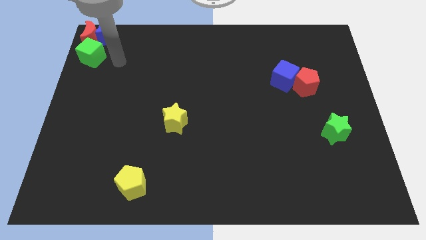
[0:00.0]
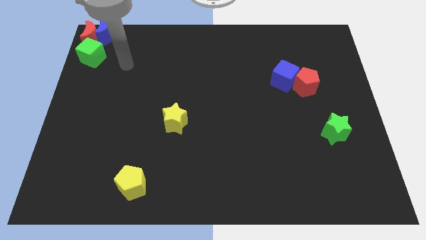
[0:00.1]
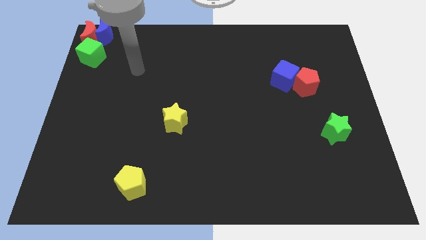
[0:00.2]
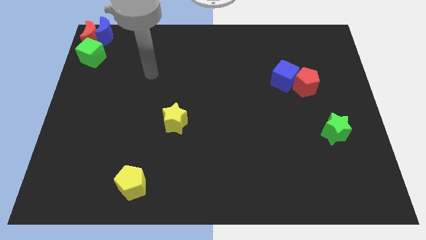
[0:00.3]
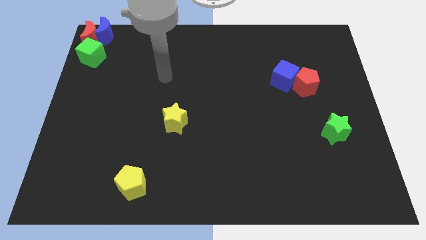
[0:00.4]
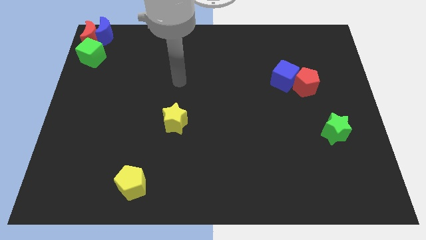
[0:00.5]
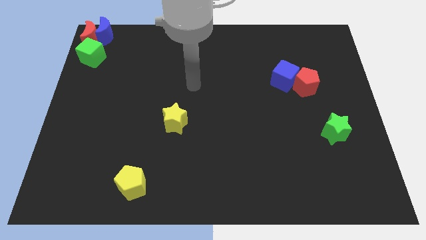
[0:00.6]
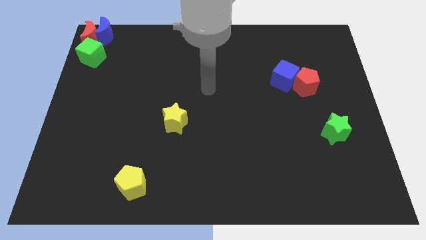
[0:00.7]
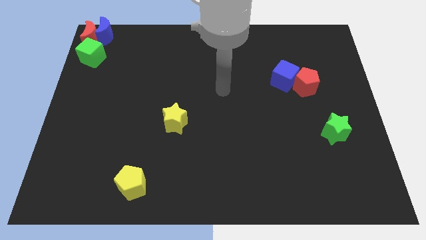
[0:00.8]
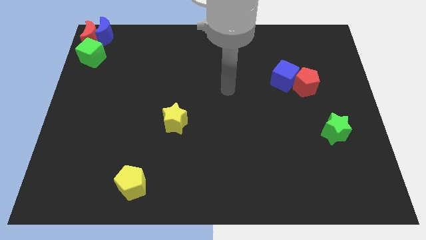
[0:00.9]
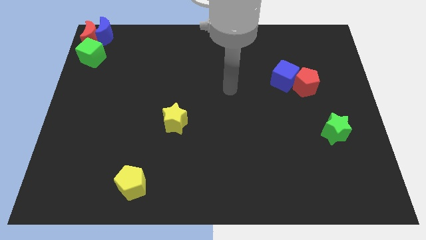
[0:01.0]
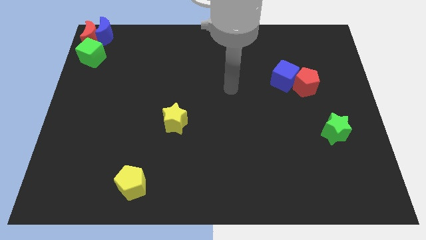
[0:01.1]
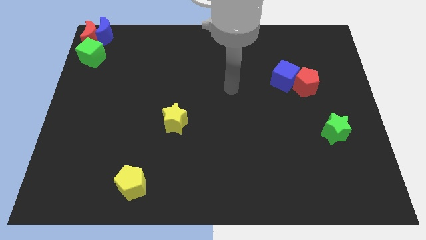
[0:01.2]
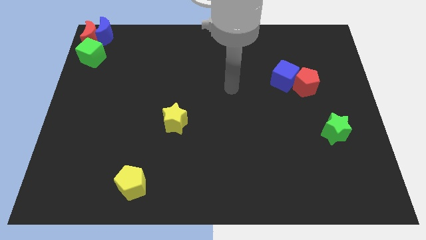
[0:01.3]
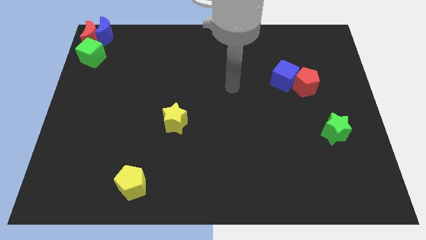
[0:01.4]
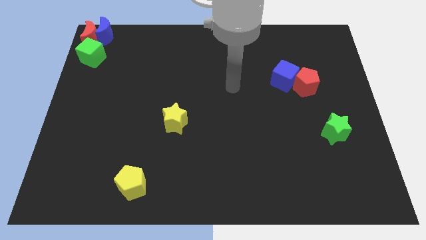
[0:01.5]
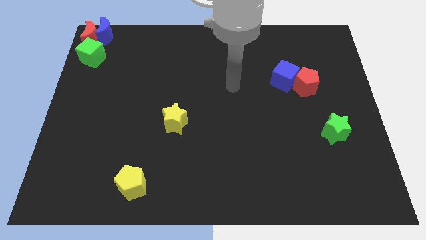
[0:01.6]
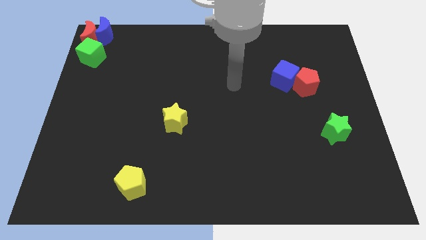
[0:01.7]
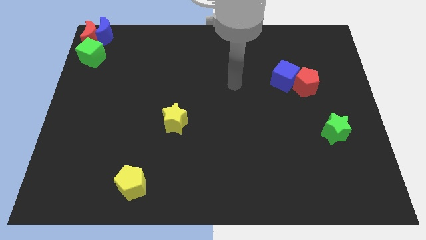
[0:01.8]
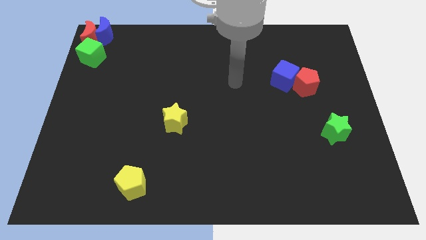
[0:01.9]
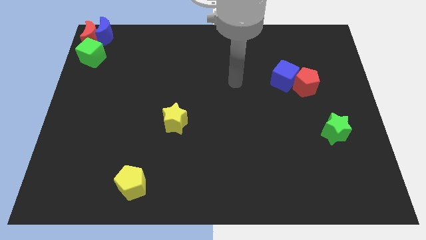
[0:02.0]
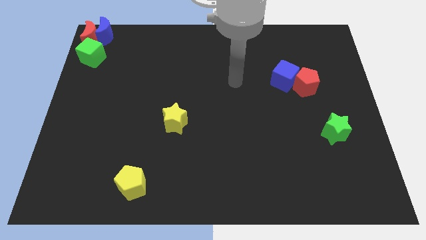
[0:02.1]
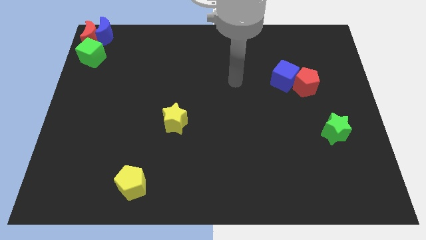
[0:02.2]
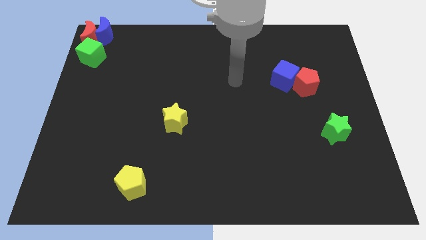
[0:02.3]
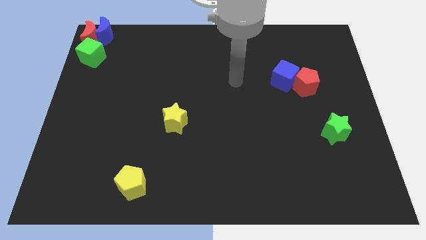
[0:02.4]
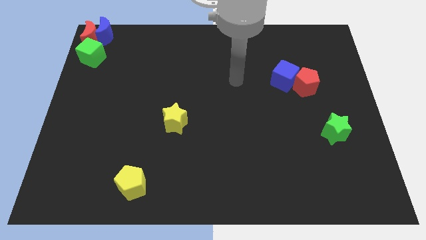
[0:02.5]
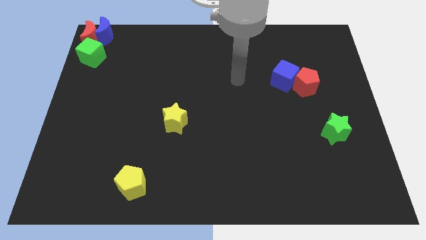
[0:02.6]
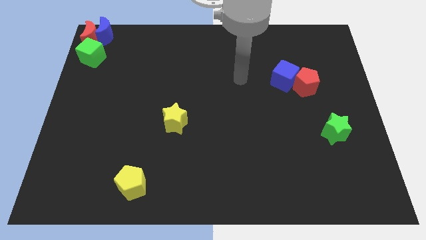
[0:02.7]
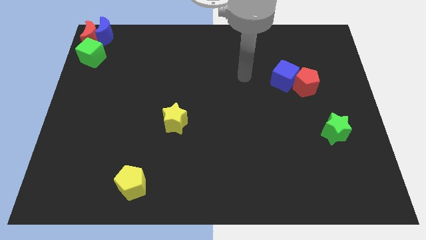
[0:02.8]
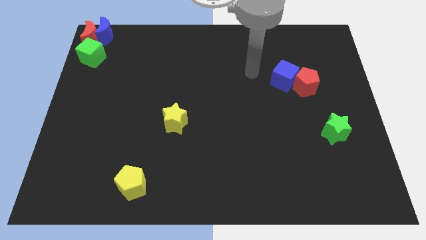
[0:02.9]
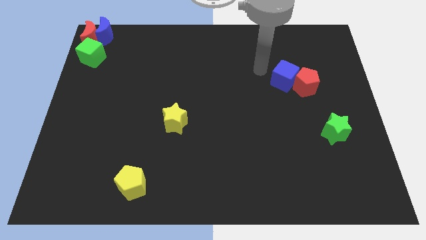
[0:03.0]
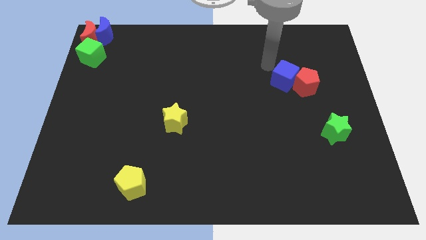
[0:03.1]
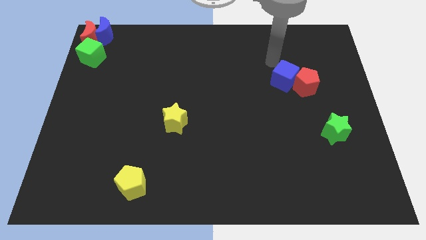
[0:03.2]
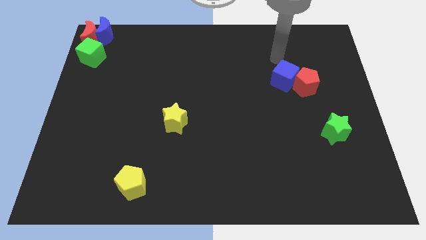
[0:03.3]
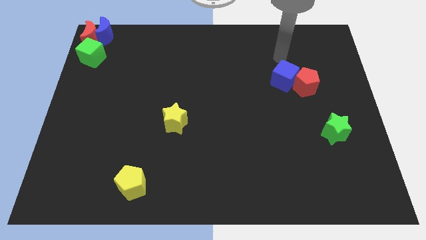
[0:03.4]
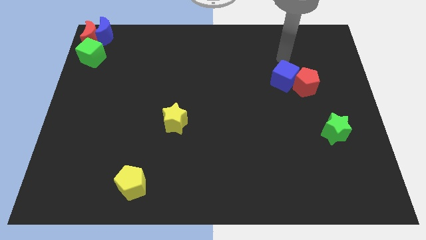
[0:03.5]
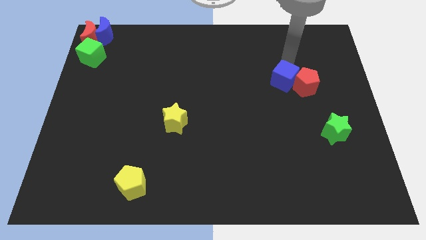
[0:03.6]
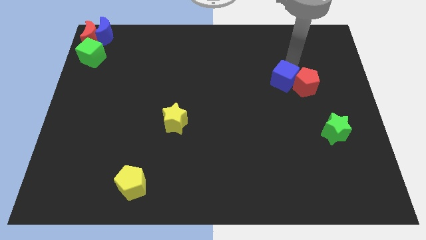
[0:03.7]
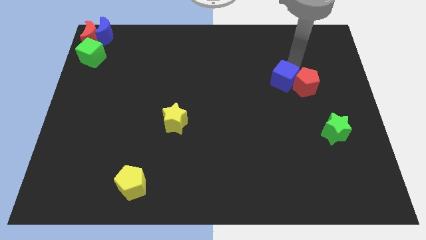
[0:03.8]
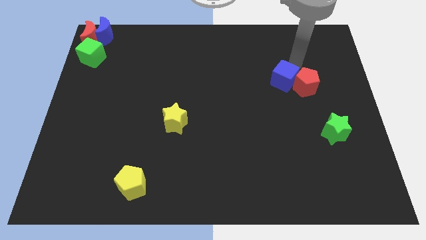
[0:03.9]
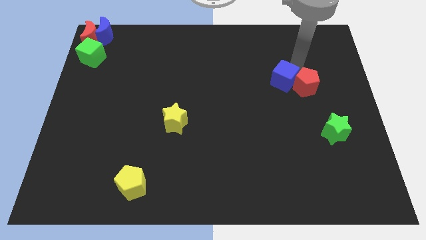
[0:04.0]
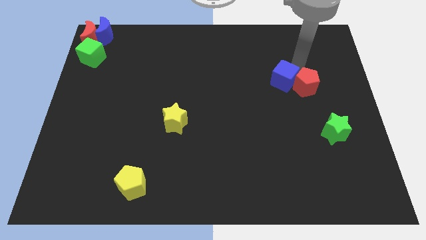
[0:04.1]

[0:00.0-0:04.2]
move your arm away from the green cube

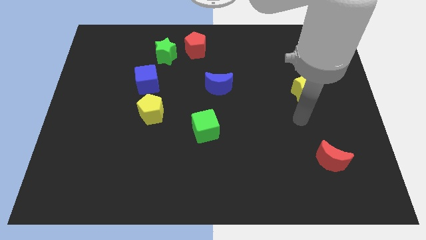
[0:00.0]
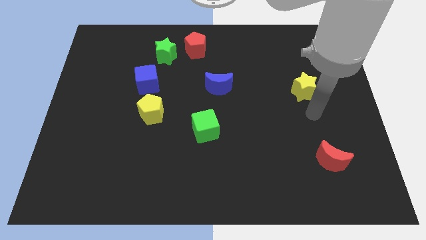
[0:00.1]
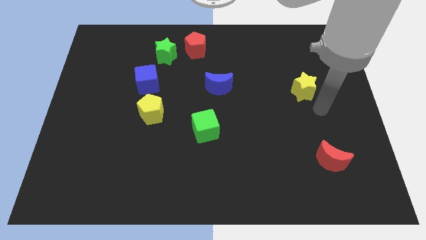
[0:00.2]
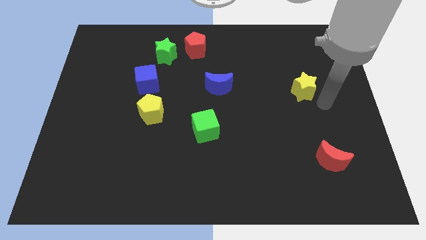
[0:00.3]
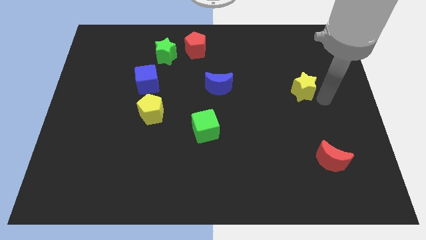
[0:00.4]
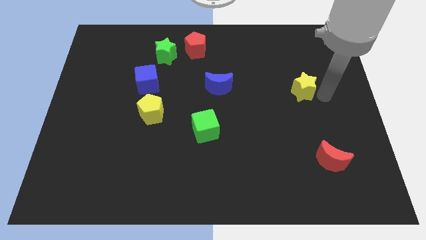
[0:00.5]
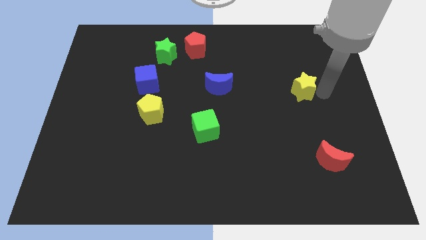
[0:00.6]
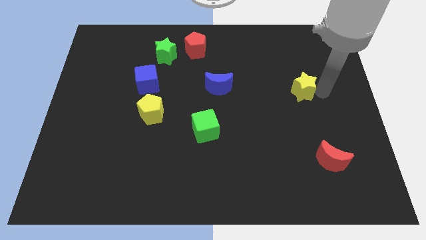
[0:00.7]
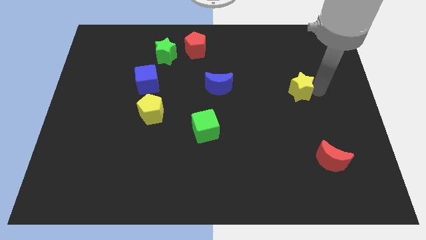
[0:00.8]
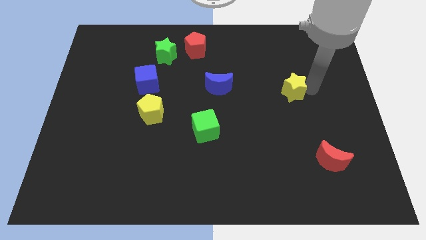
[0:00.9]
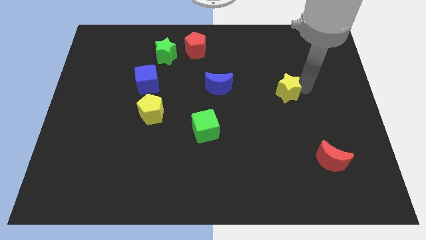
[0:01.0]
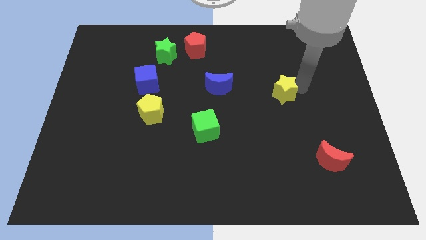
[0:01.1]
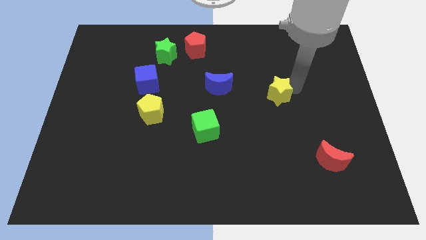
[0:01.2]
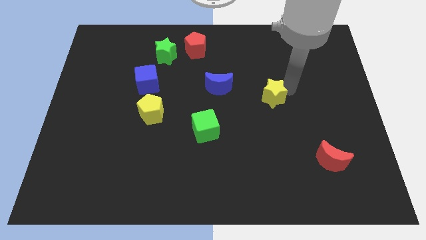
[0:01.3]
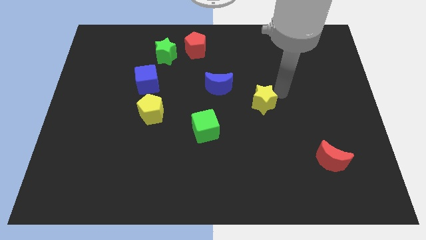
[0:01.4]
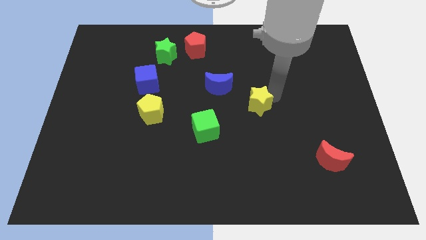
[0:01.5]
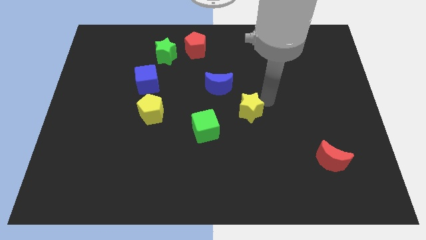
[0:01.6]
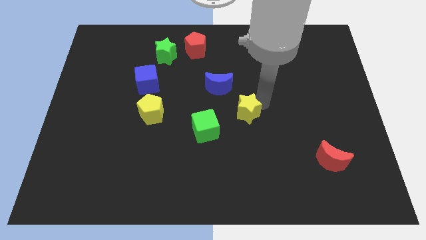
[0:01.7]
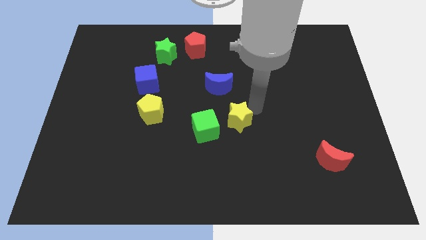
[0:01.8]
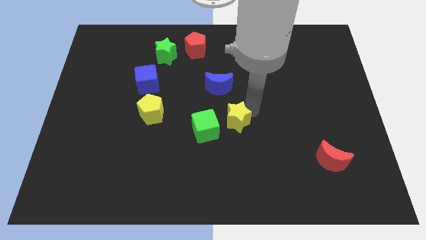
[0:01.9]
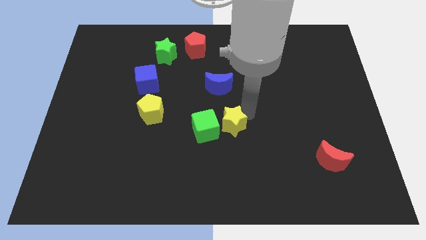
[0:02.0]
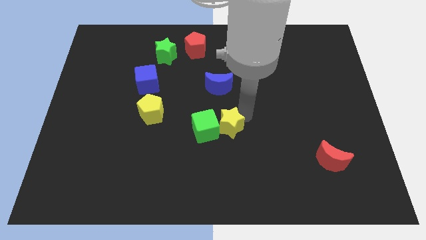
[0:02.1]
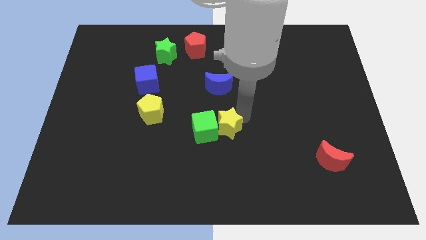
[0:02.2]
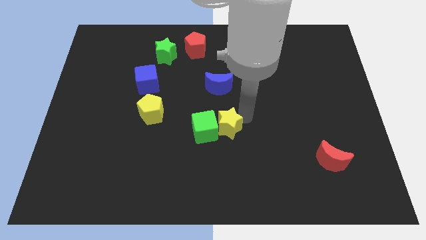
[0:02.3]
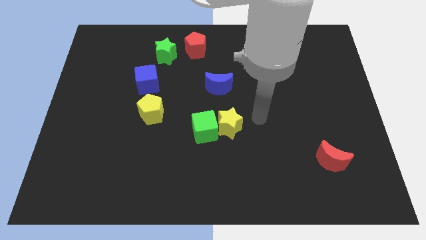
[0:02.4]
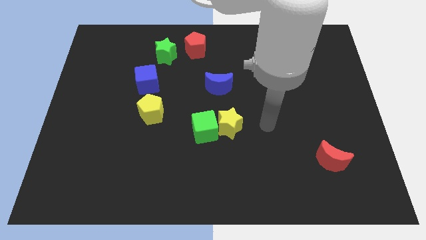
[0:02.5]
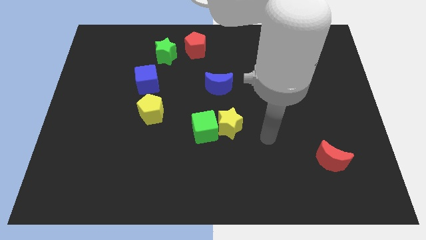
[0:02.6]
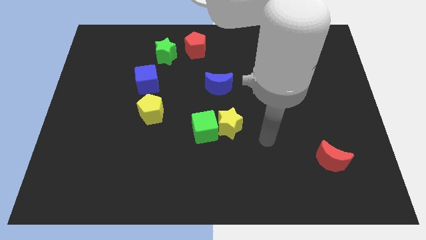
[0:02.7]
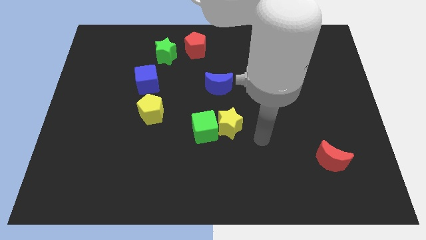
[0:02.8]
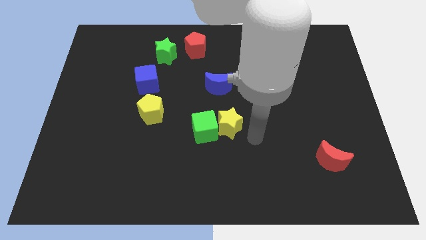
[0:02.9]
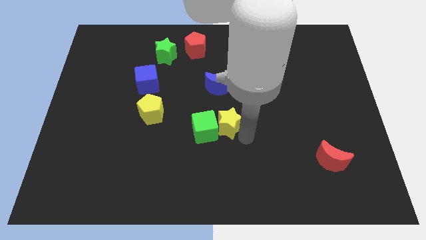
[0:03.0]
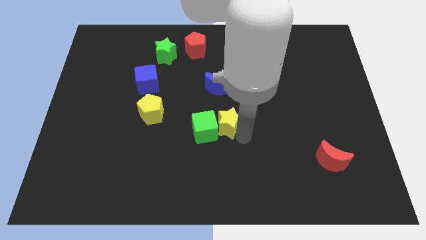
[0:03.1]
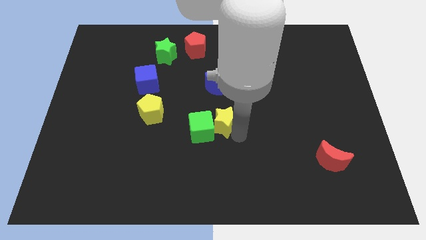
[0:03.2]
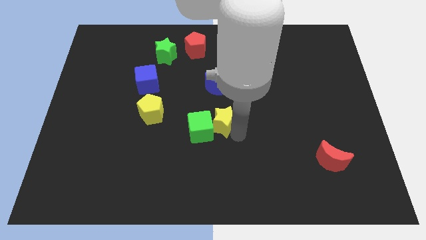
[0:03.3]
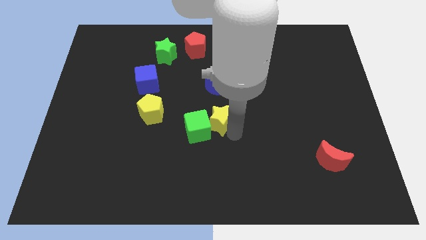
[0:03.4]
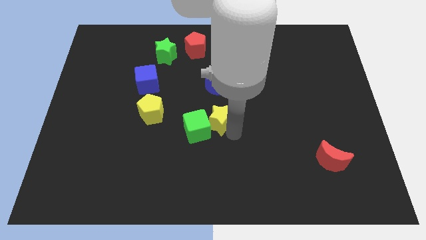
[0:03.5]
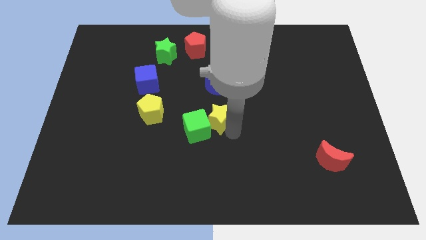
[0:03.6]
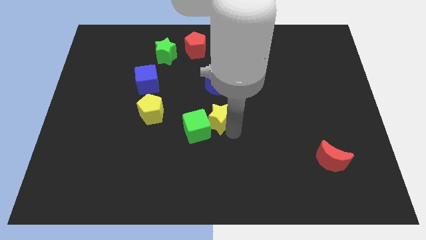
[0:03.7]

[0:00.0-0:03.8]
push yellow star in to green cube

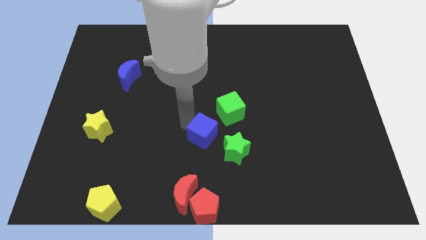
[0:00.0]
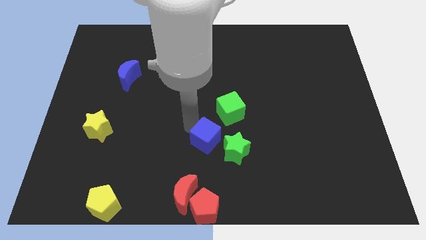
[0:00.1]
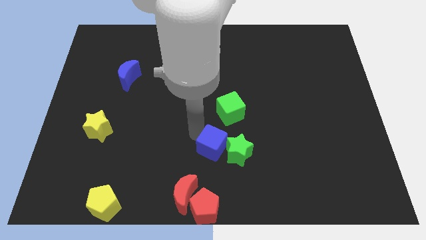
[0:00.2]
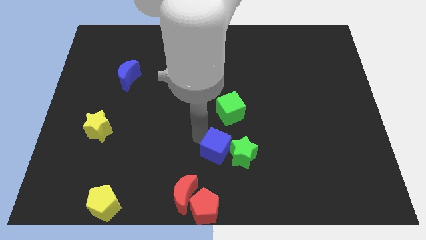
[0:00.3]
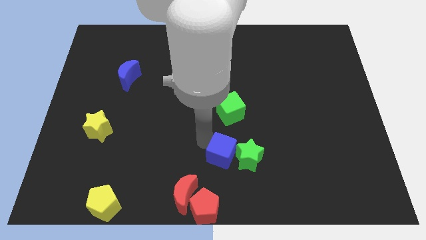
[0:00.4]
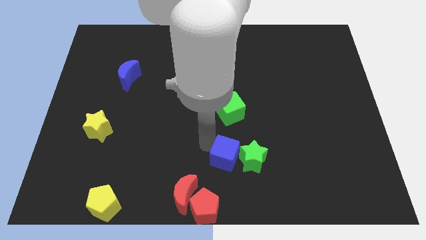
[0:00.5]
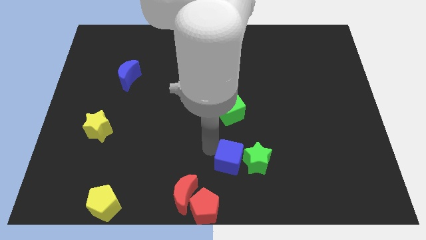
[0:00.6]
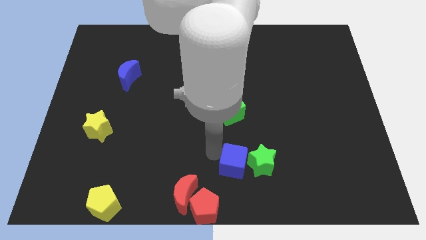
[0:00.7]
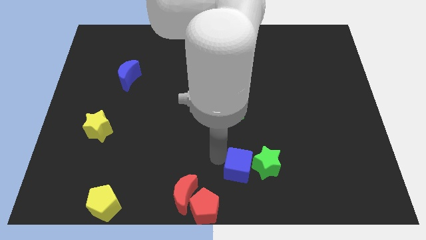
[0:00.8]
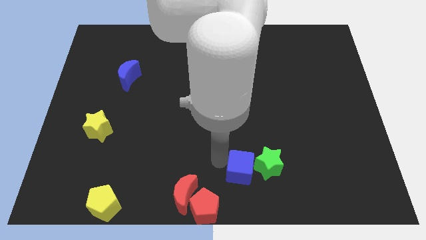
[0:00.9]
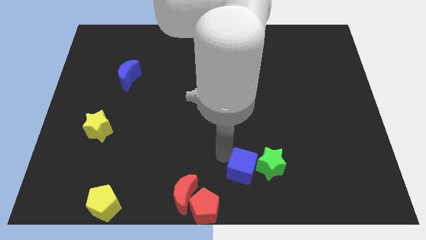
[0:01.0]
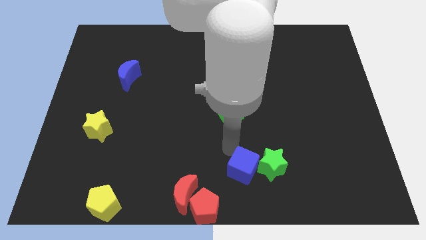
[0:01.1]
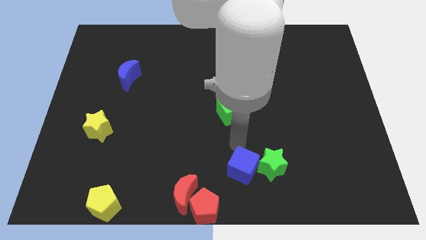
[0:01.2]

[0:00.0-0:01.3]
push the blue cube into the green star
